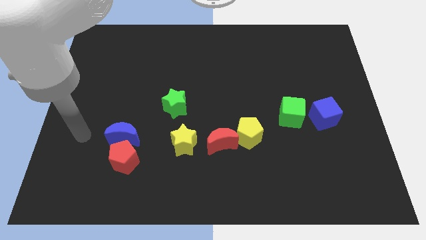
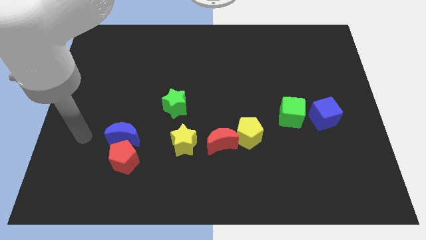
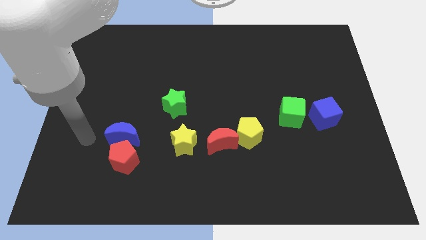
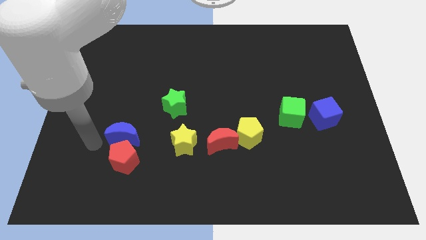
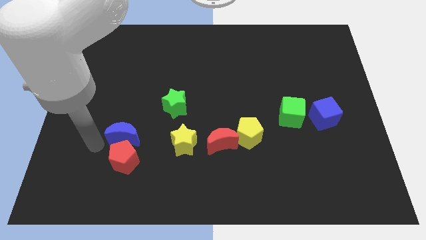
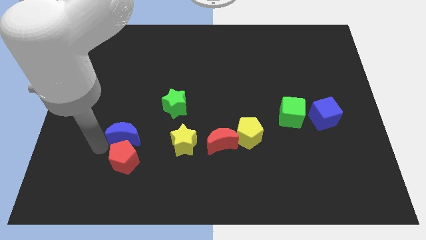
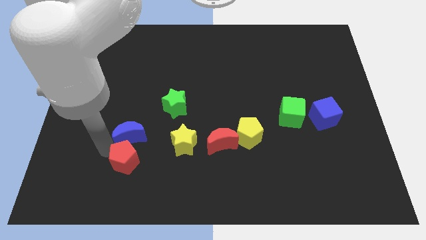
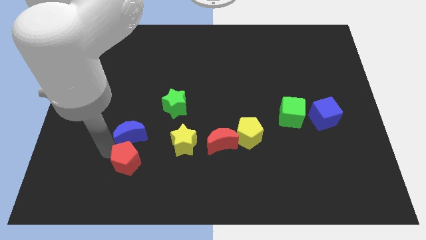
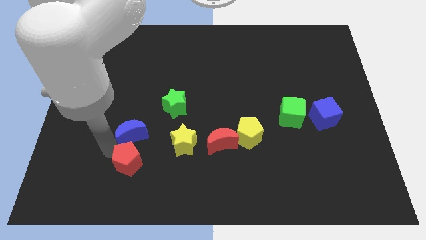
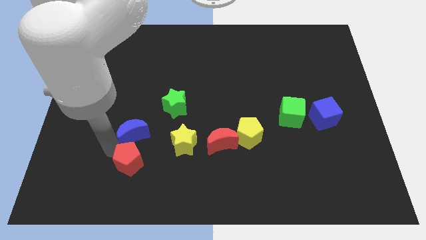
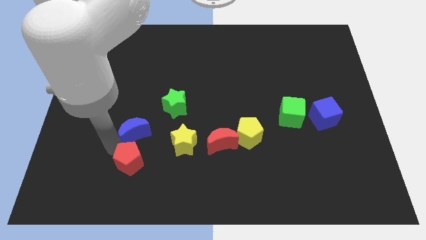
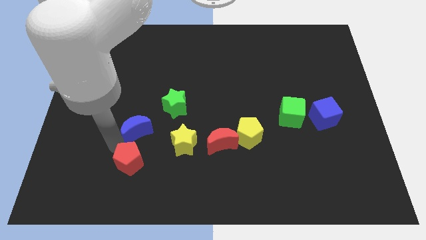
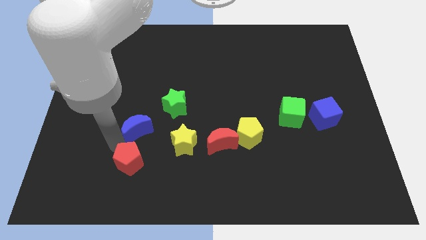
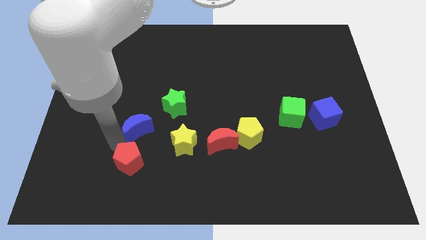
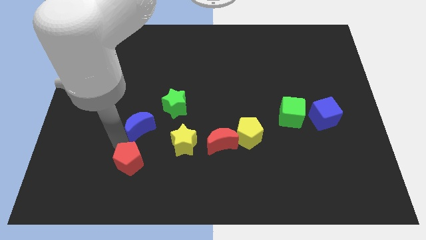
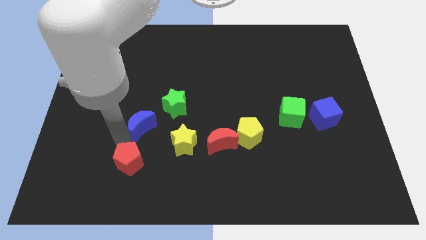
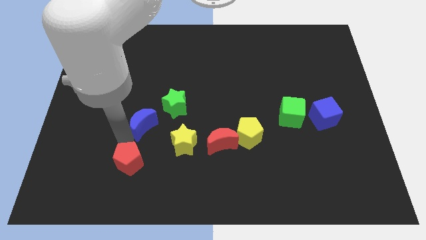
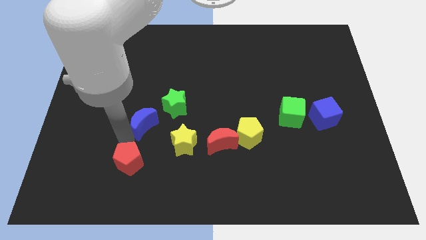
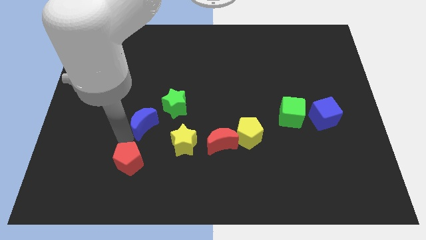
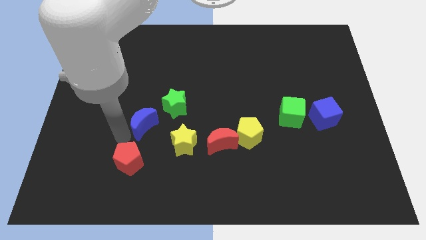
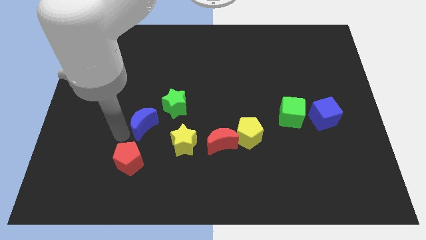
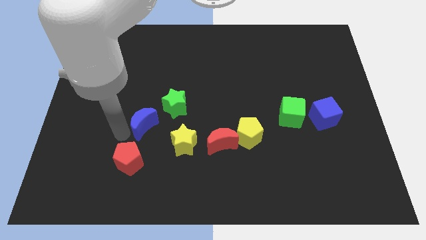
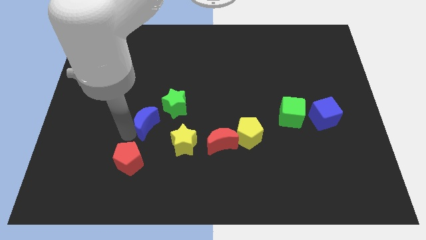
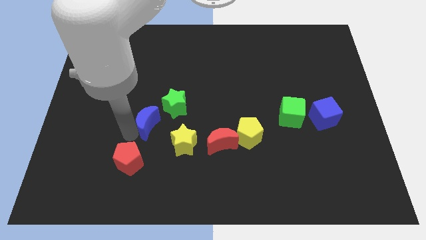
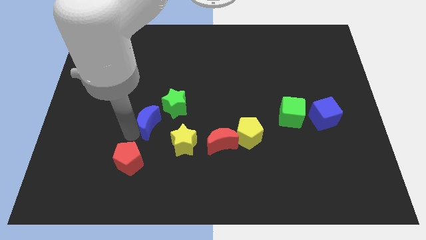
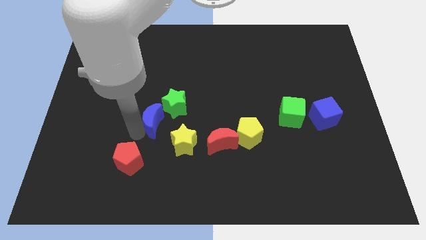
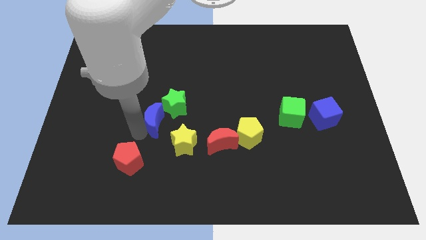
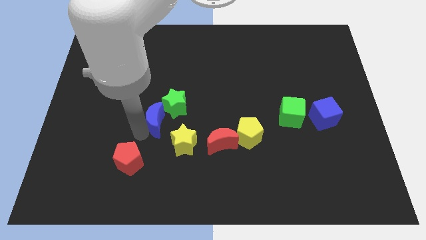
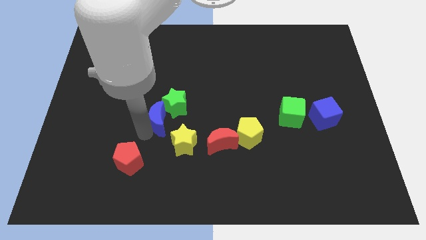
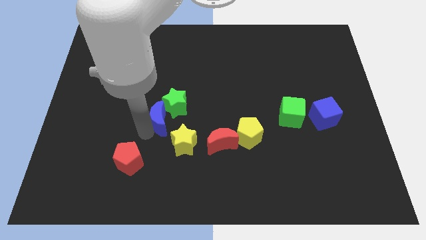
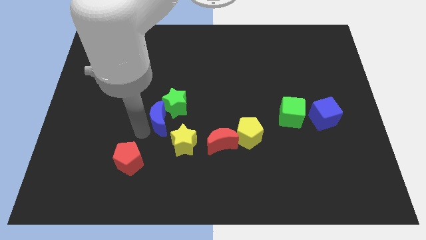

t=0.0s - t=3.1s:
move the blue crescent into the green star

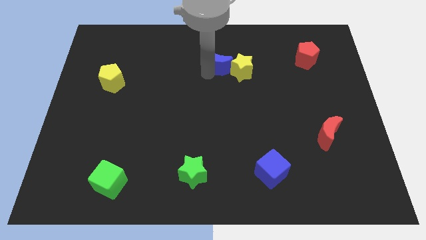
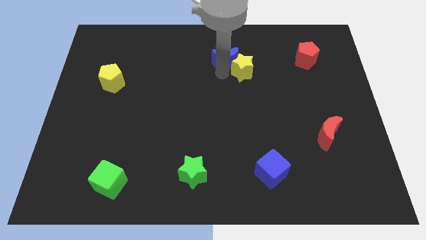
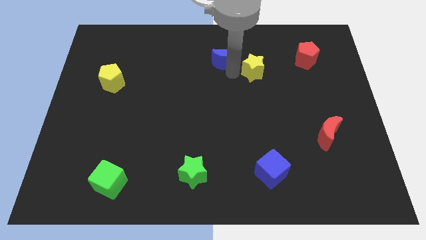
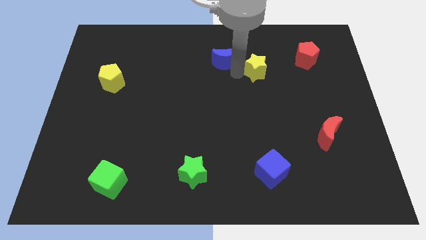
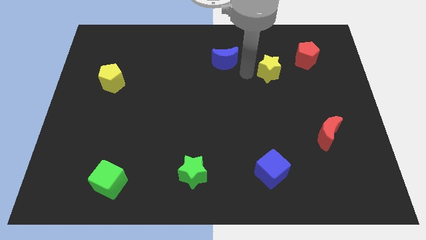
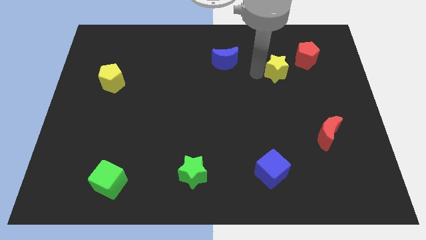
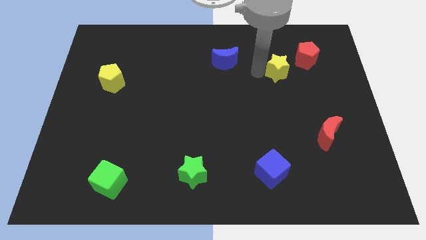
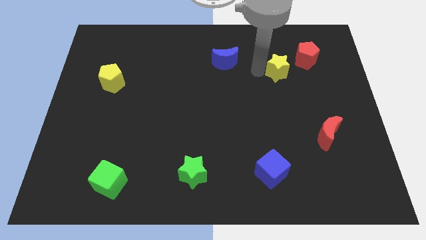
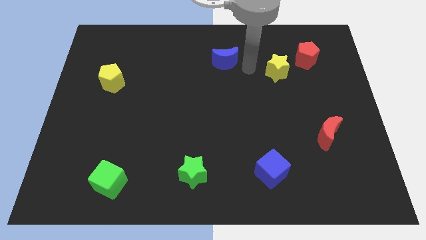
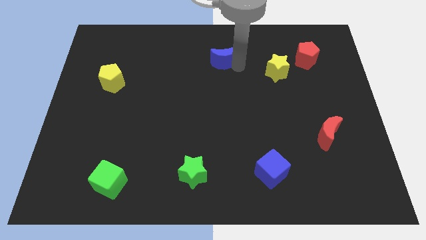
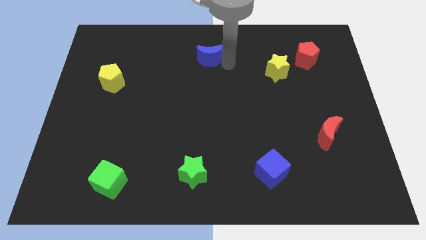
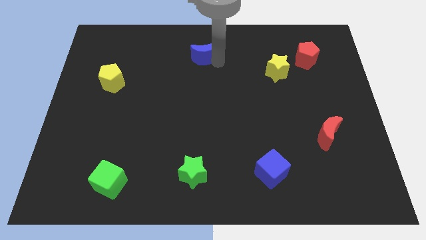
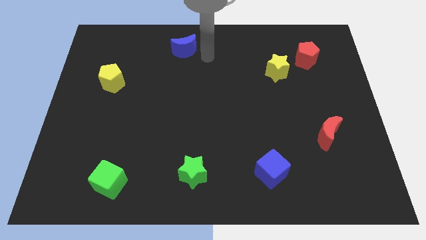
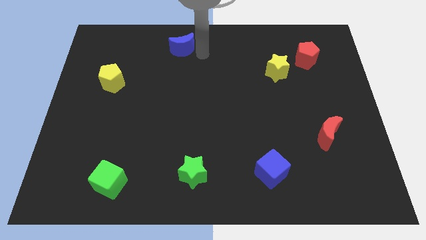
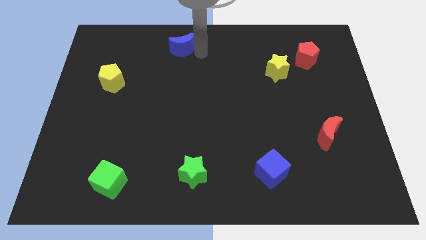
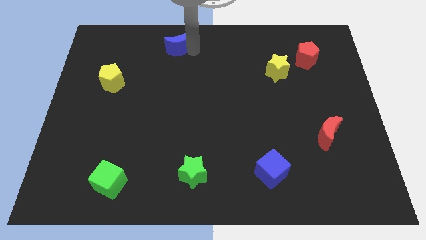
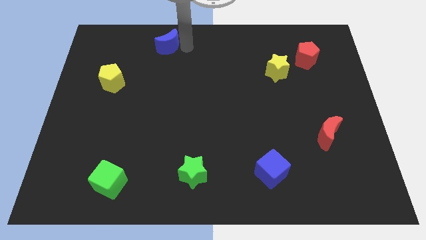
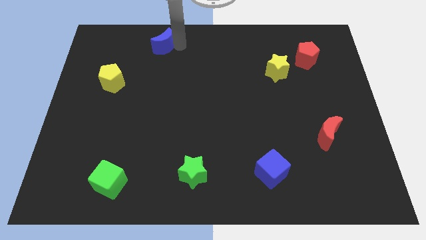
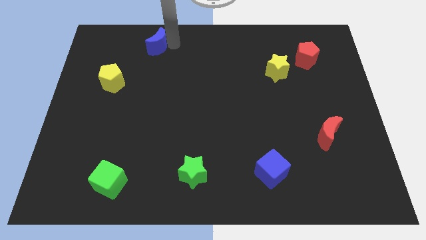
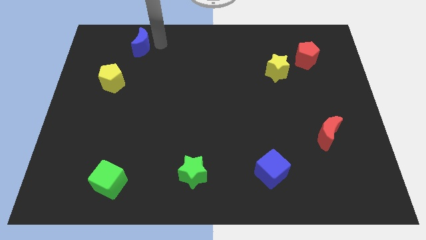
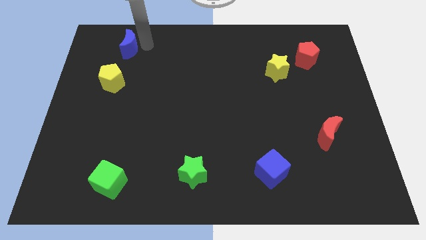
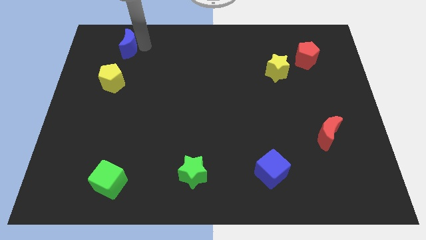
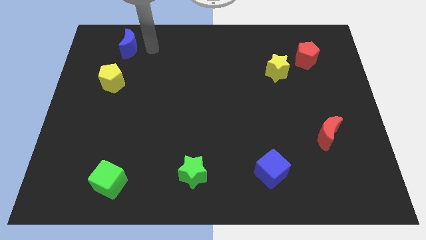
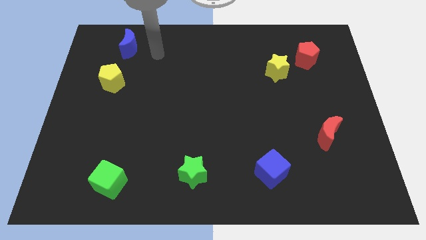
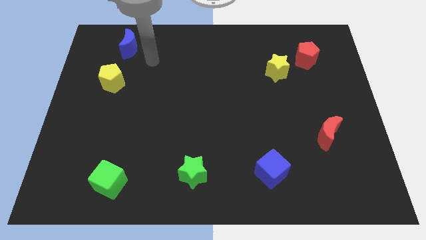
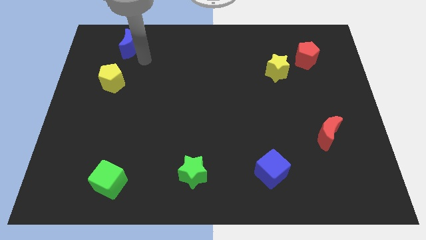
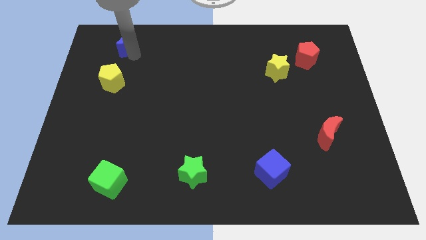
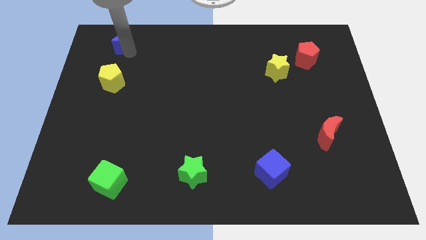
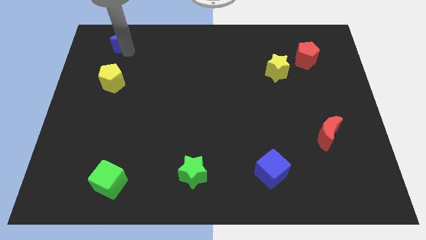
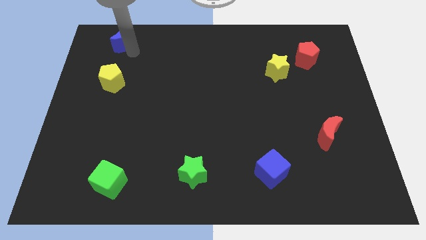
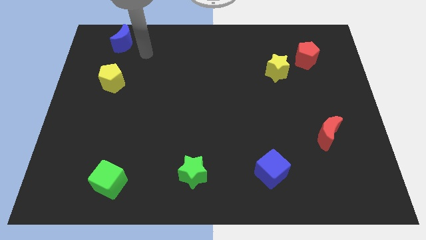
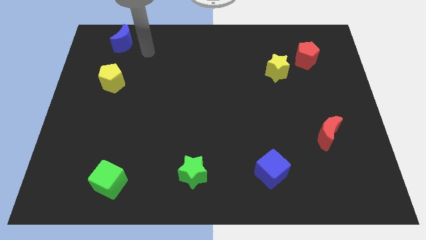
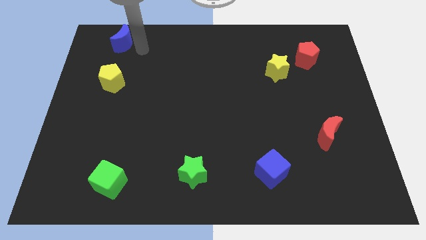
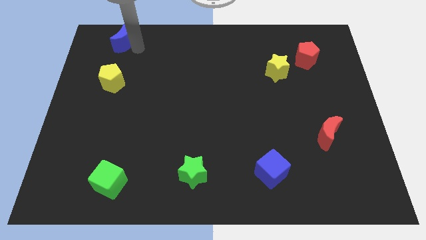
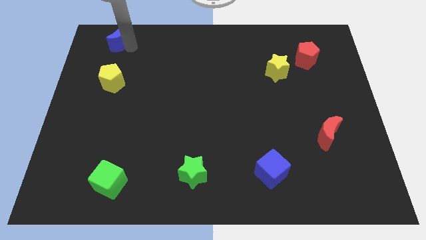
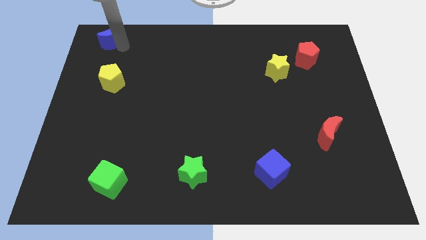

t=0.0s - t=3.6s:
move blue moon to the top of yellow pentagon

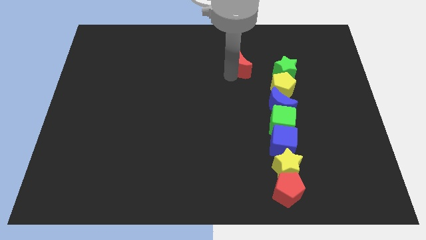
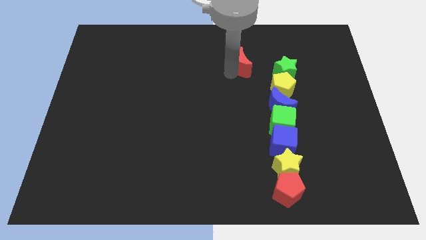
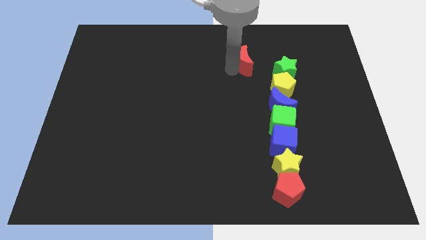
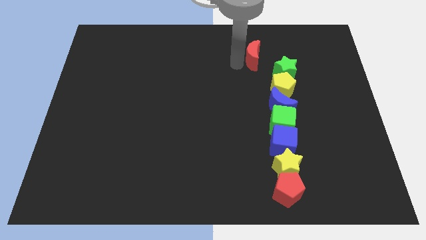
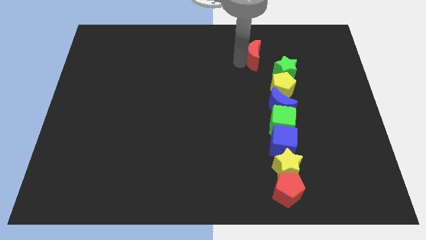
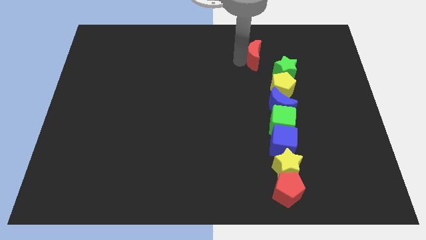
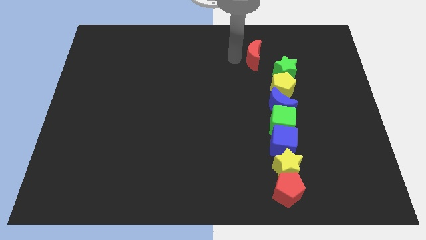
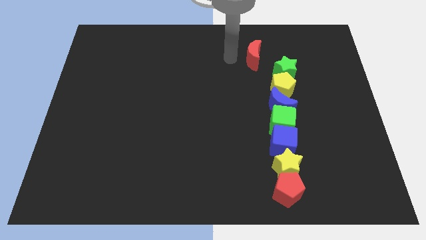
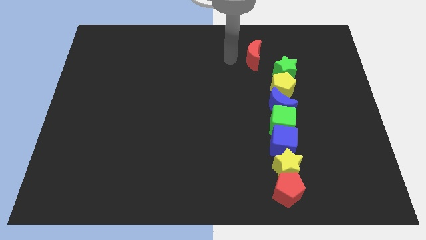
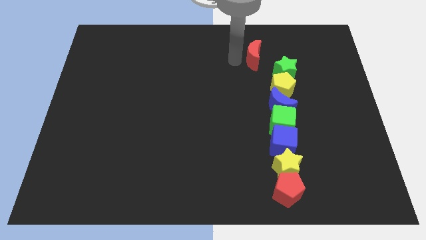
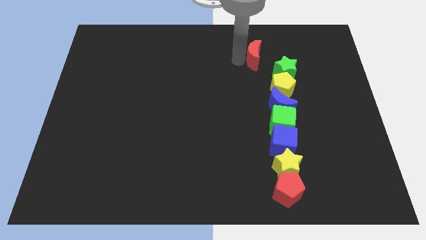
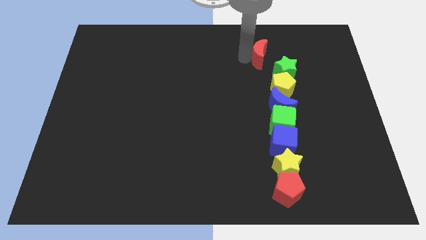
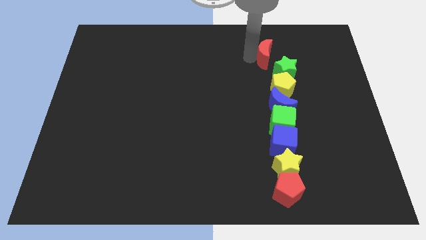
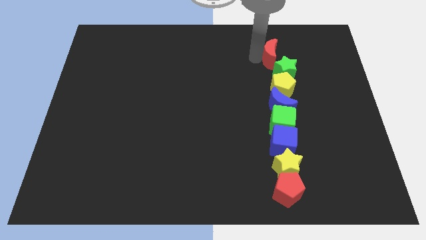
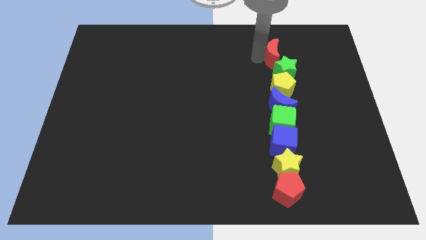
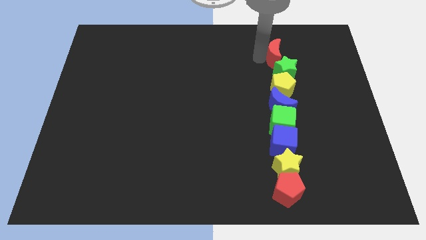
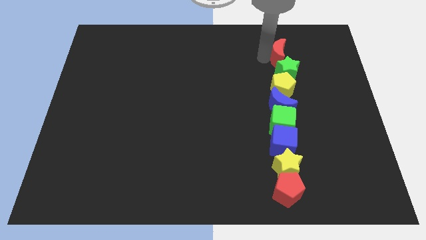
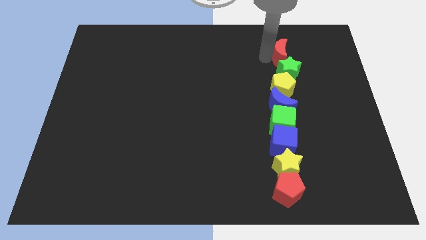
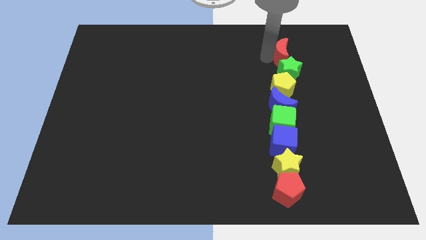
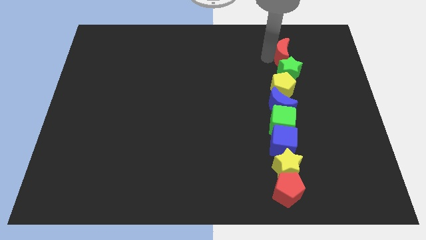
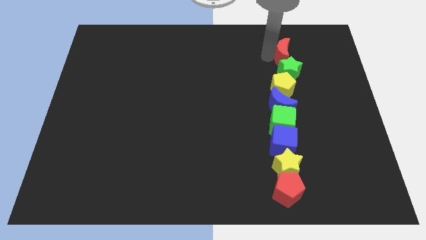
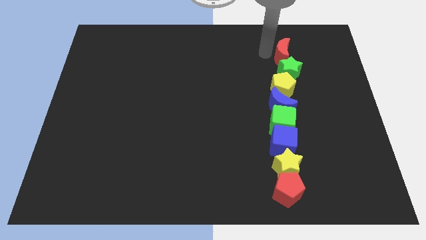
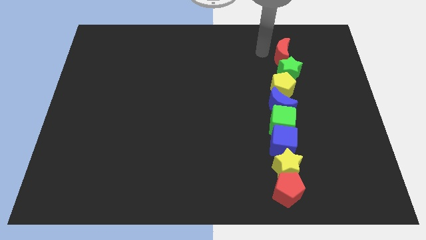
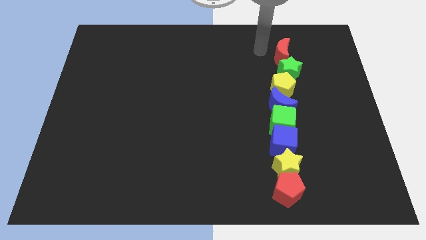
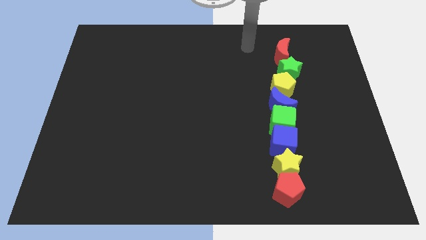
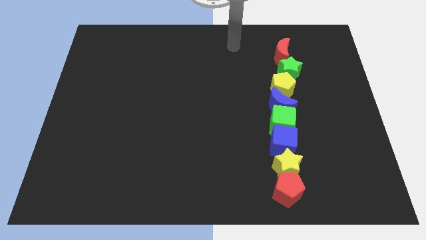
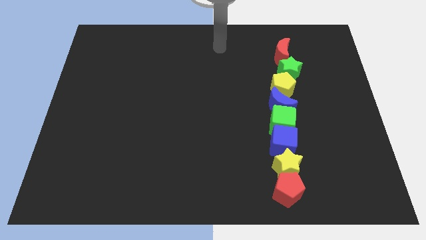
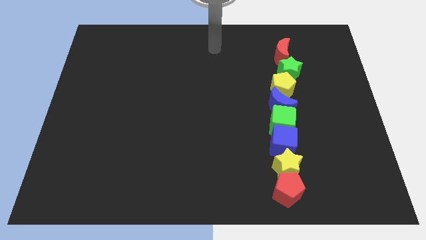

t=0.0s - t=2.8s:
move the red crescent above the green star
